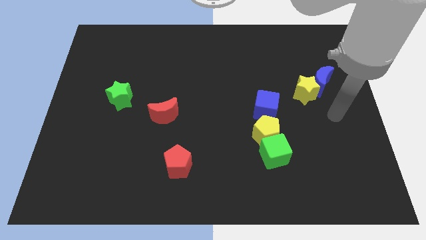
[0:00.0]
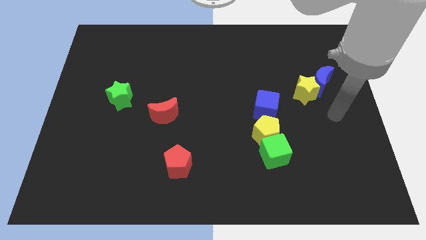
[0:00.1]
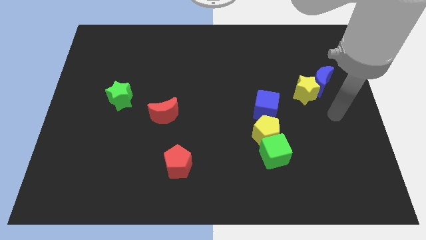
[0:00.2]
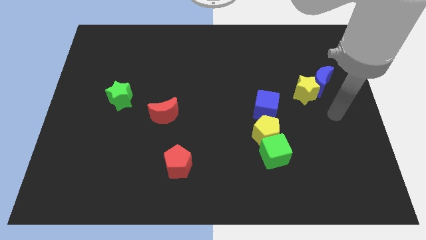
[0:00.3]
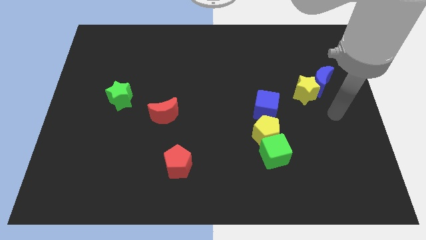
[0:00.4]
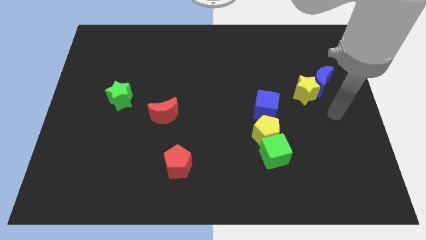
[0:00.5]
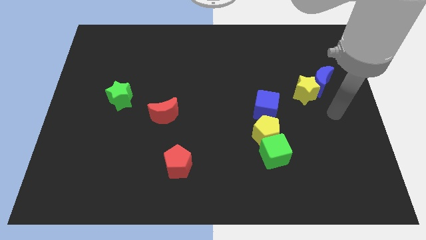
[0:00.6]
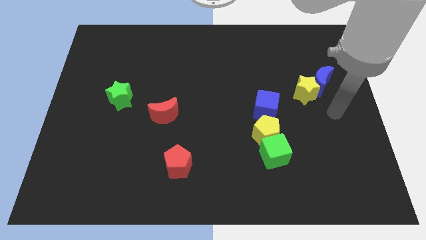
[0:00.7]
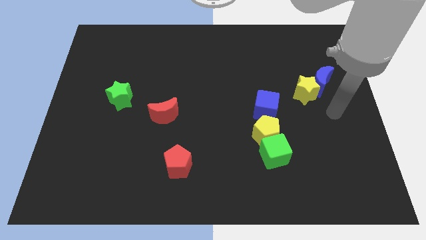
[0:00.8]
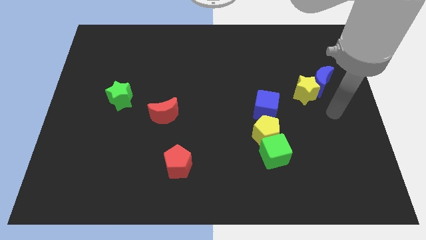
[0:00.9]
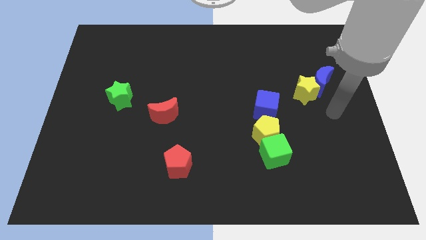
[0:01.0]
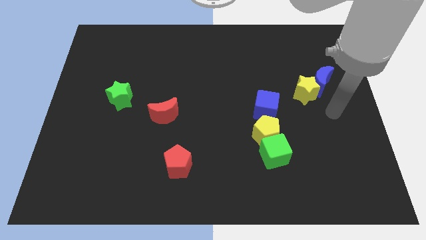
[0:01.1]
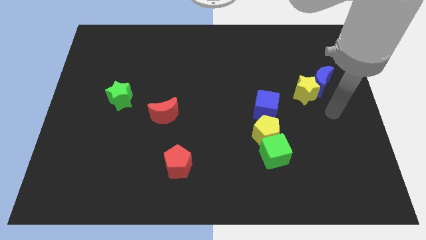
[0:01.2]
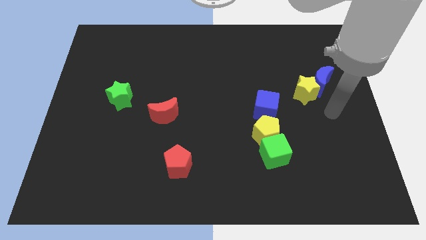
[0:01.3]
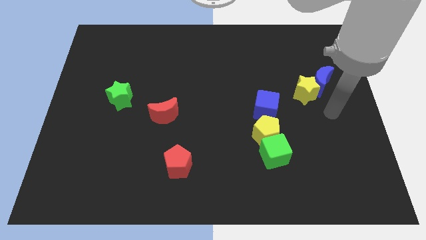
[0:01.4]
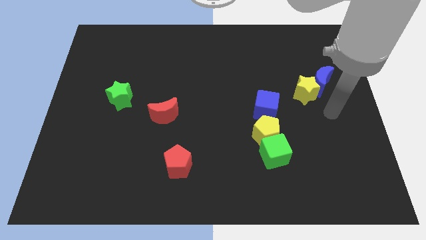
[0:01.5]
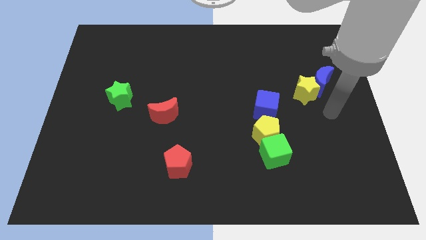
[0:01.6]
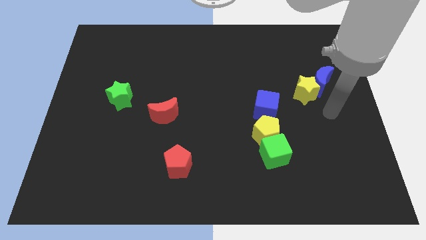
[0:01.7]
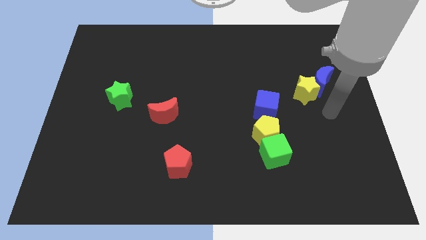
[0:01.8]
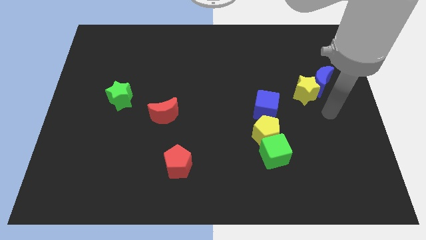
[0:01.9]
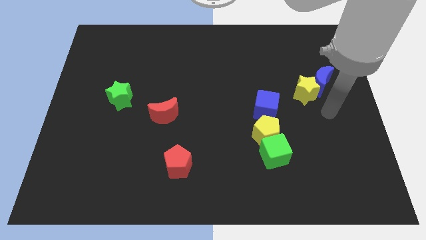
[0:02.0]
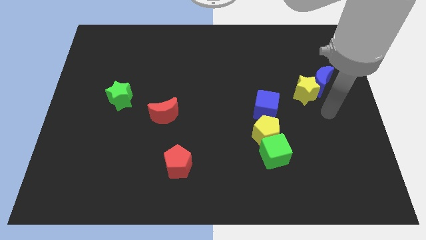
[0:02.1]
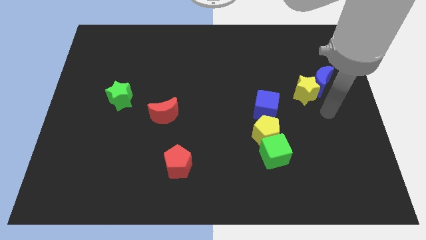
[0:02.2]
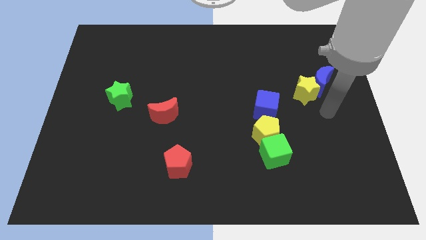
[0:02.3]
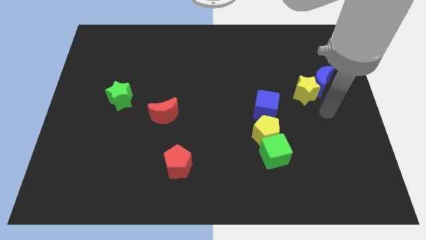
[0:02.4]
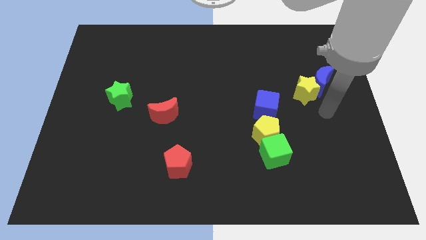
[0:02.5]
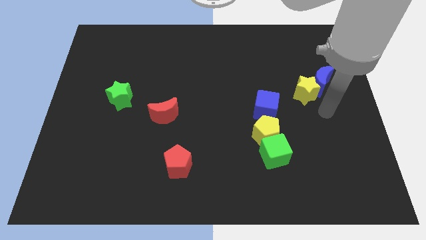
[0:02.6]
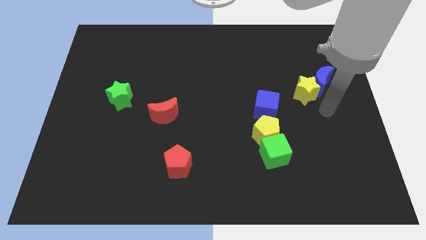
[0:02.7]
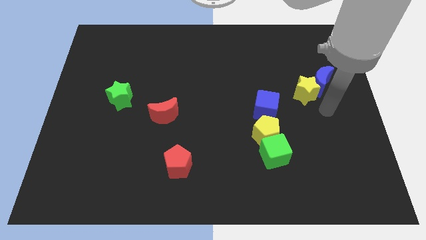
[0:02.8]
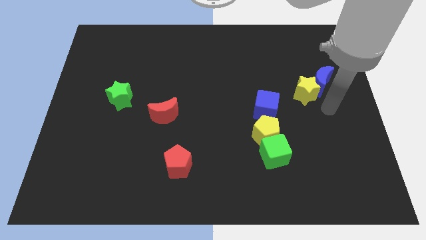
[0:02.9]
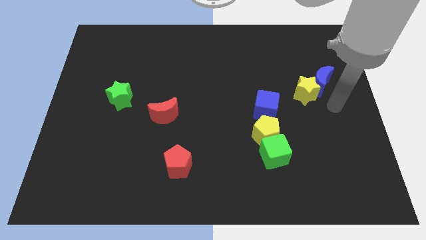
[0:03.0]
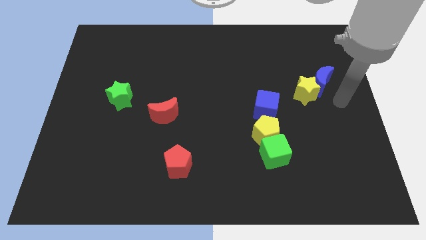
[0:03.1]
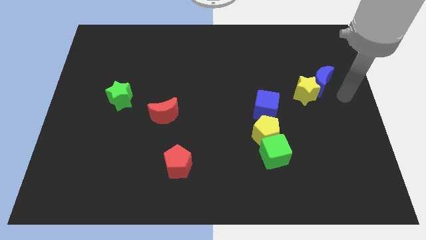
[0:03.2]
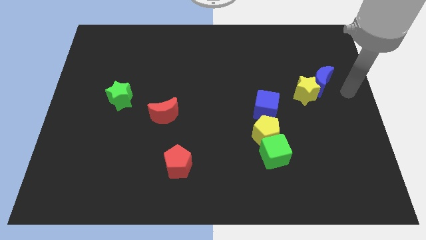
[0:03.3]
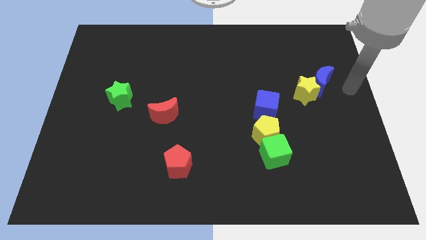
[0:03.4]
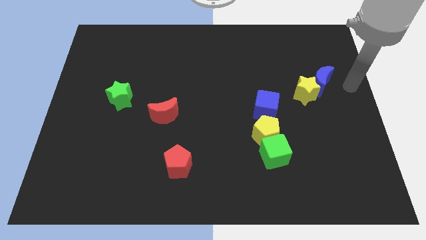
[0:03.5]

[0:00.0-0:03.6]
place the arm close to the blue crescent

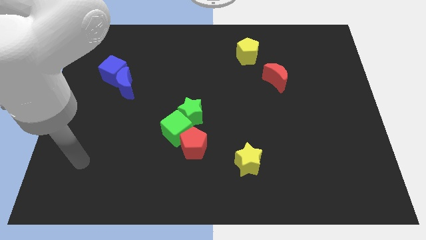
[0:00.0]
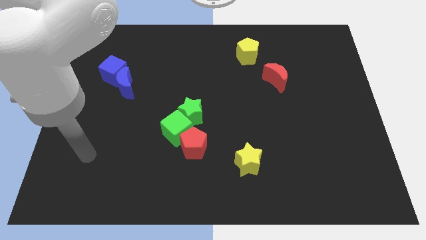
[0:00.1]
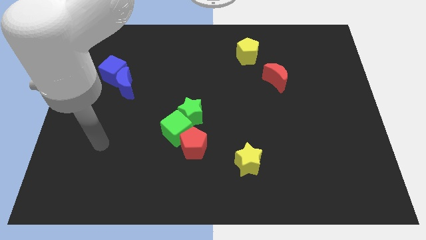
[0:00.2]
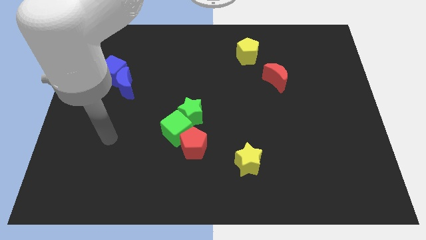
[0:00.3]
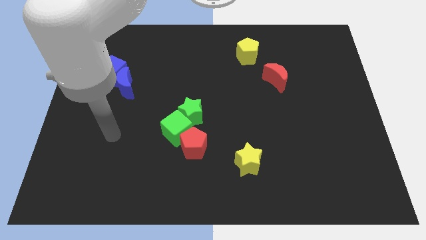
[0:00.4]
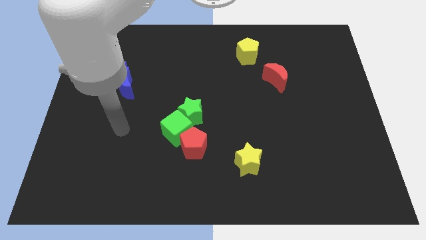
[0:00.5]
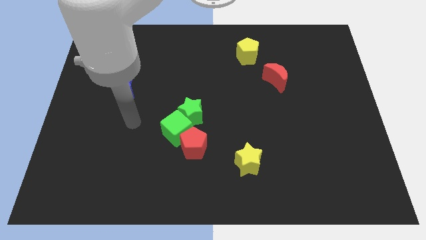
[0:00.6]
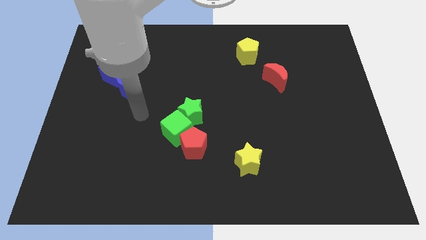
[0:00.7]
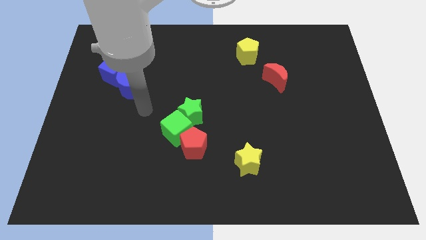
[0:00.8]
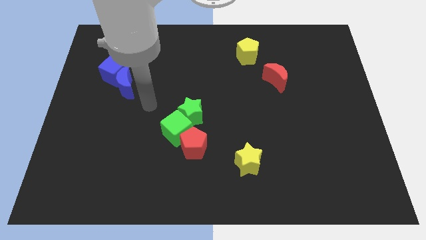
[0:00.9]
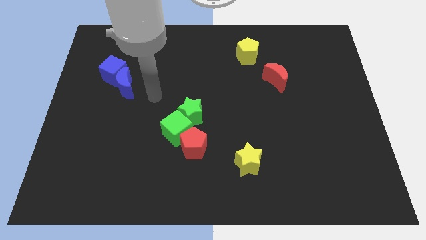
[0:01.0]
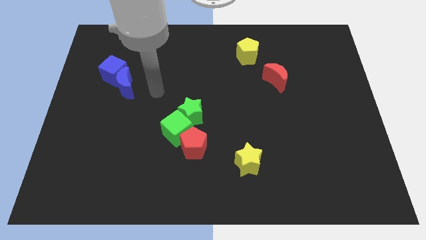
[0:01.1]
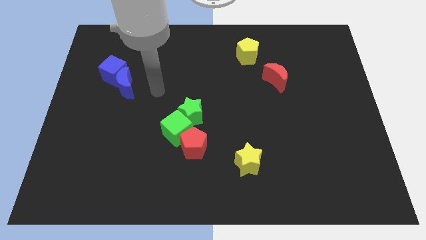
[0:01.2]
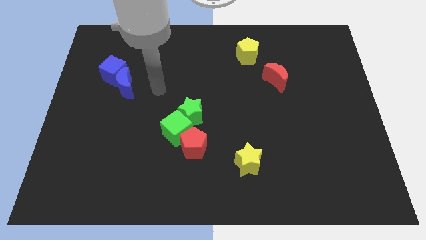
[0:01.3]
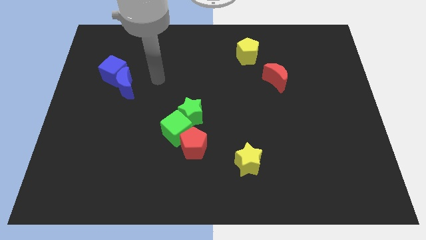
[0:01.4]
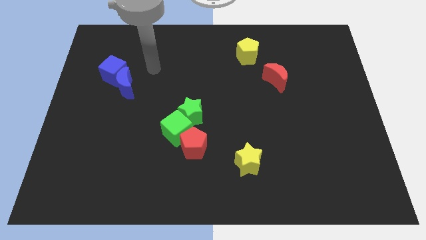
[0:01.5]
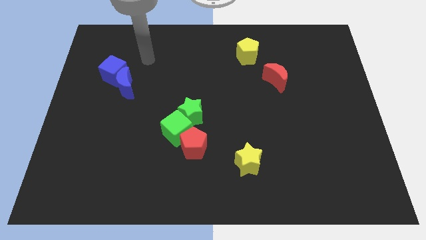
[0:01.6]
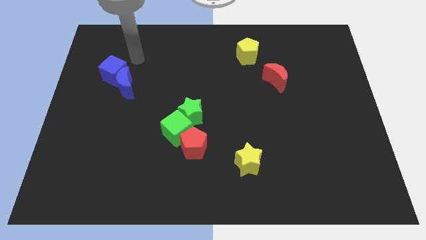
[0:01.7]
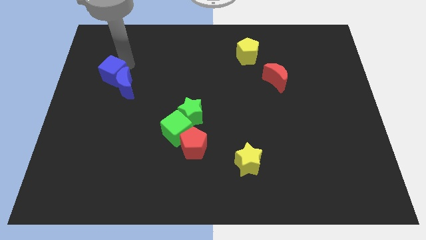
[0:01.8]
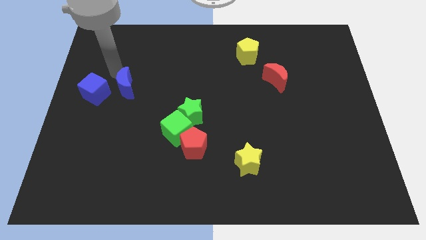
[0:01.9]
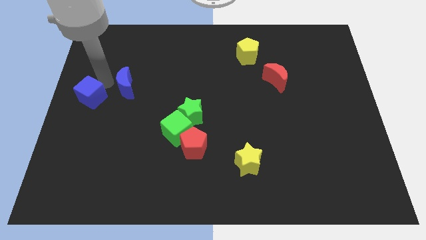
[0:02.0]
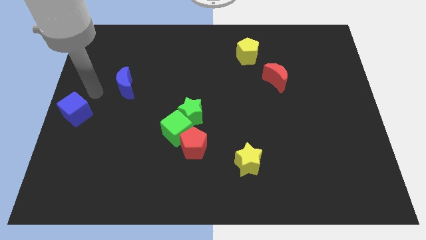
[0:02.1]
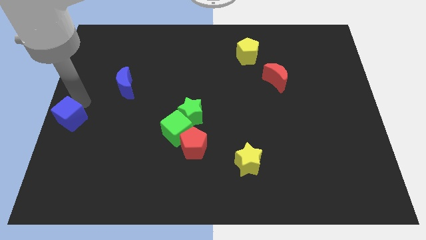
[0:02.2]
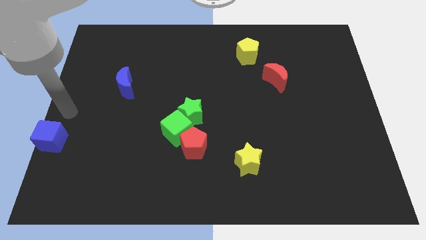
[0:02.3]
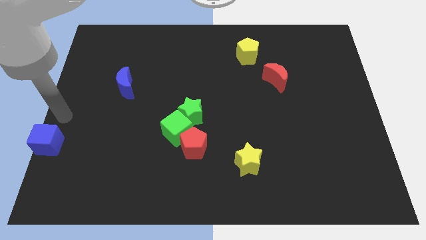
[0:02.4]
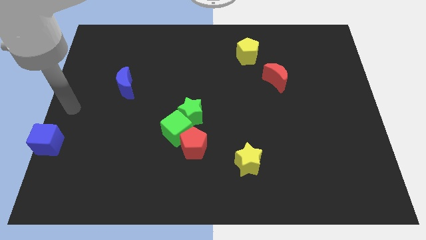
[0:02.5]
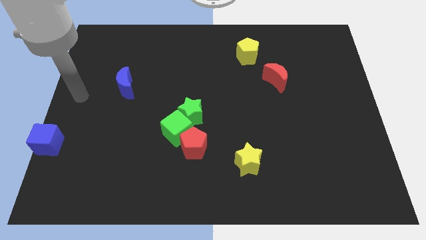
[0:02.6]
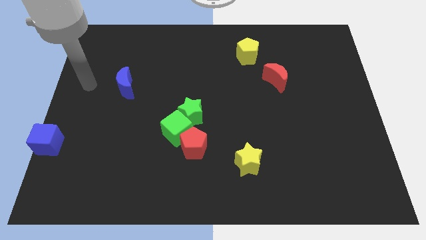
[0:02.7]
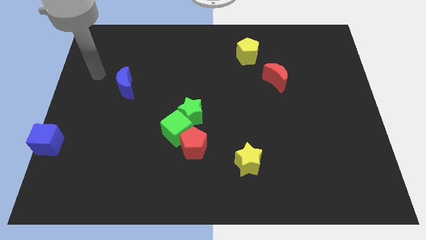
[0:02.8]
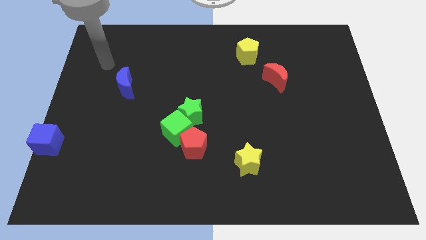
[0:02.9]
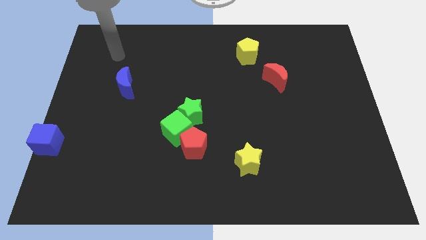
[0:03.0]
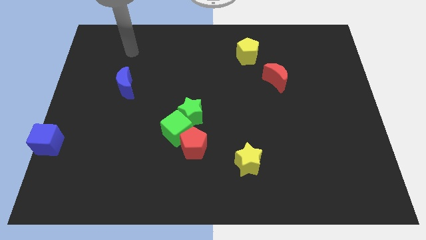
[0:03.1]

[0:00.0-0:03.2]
separate blue cube and blue moon

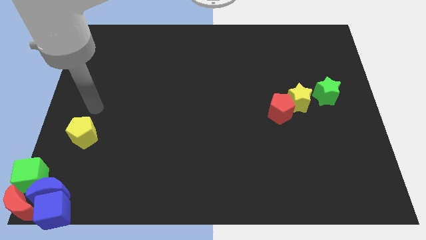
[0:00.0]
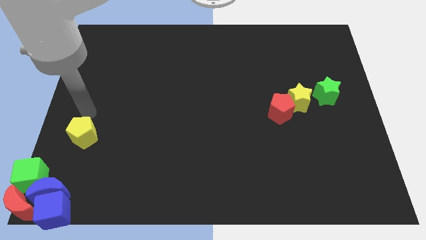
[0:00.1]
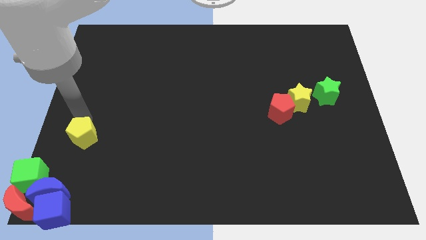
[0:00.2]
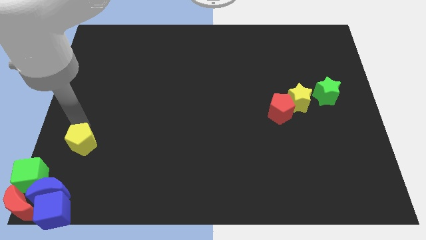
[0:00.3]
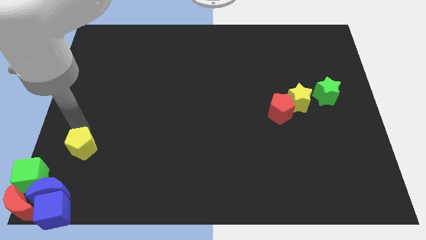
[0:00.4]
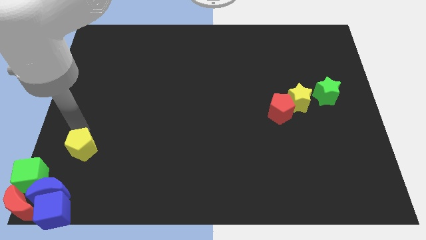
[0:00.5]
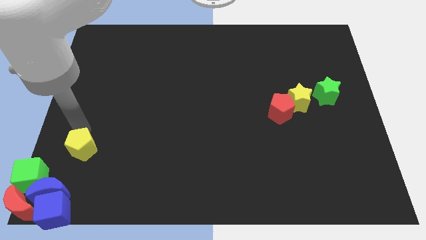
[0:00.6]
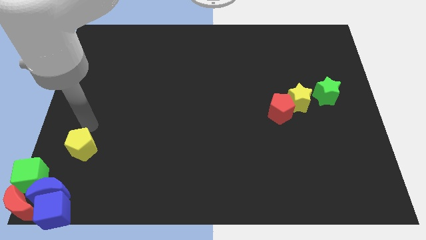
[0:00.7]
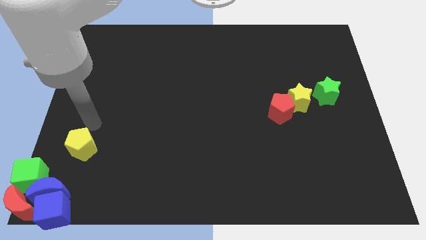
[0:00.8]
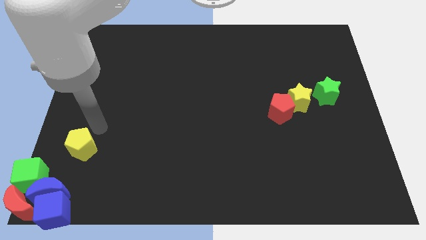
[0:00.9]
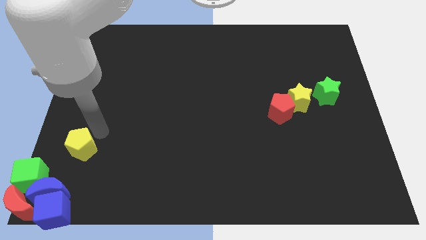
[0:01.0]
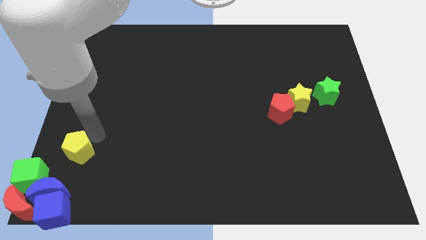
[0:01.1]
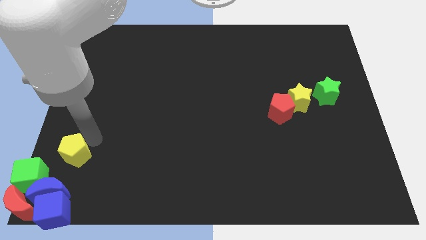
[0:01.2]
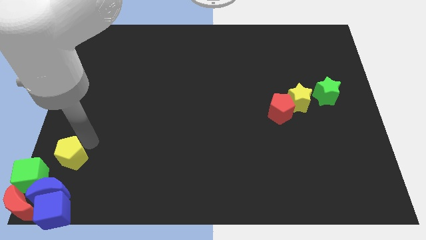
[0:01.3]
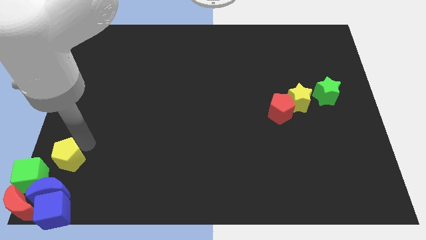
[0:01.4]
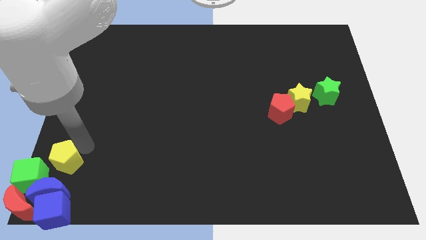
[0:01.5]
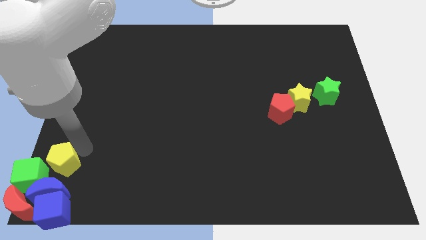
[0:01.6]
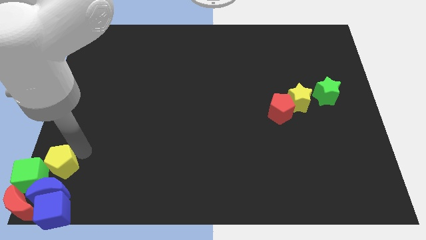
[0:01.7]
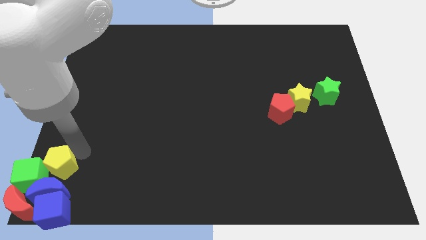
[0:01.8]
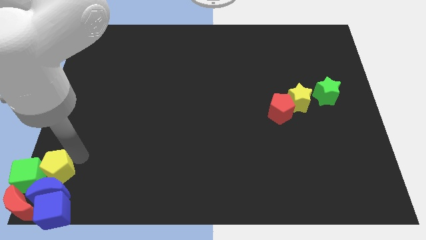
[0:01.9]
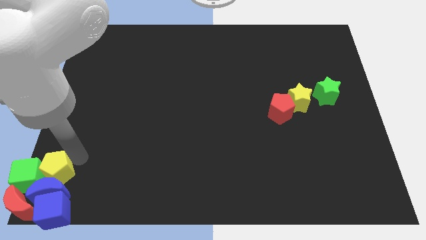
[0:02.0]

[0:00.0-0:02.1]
push the yellow pentagon into the group of blocks
